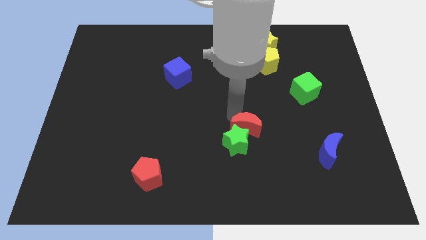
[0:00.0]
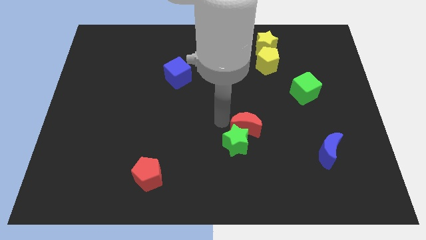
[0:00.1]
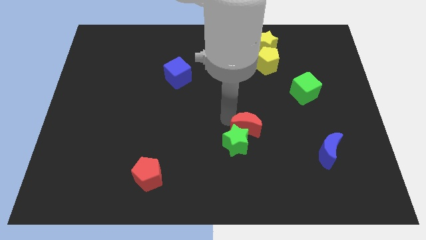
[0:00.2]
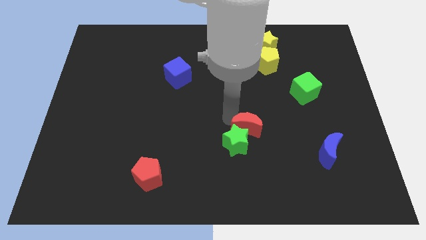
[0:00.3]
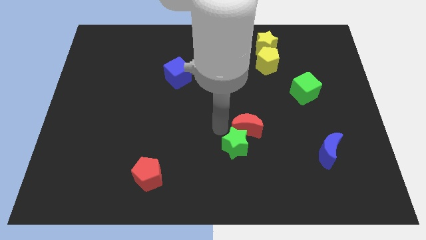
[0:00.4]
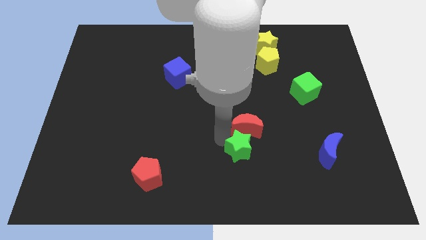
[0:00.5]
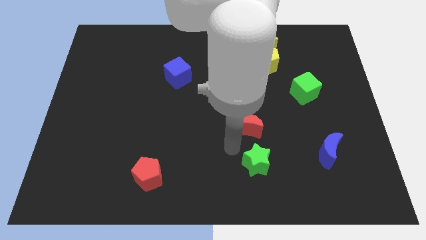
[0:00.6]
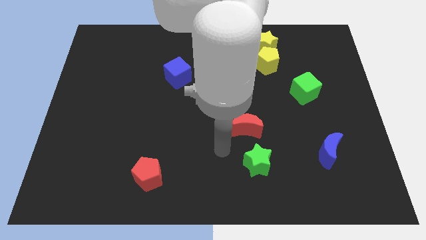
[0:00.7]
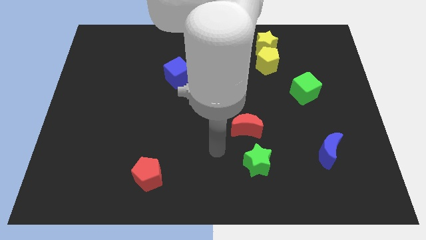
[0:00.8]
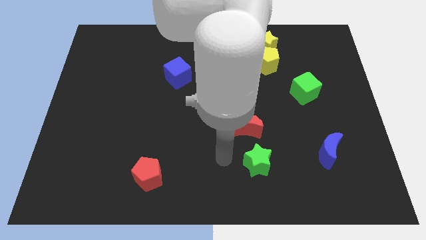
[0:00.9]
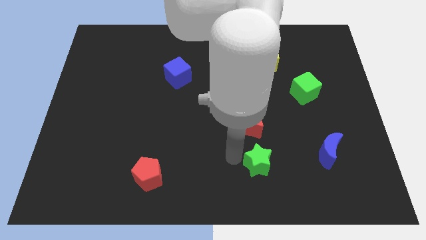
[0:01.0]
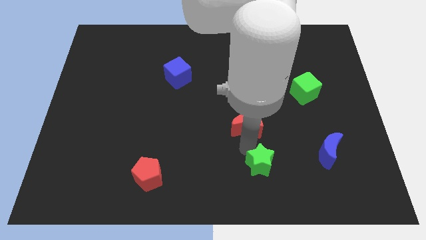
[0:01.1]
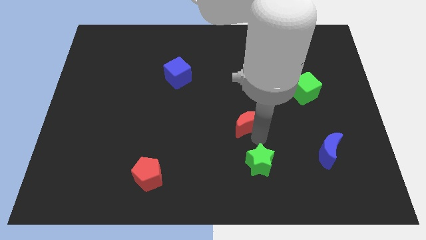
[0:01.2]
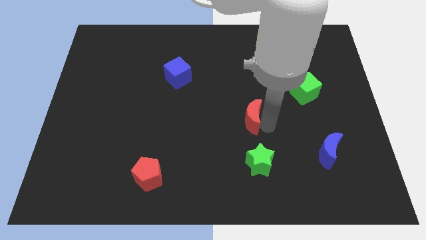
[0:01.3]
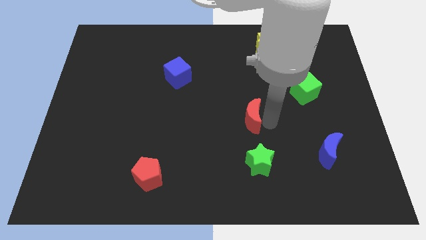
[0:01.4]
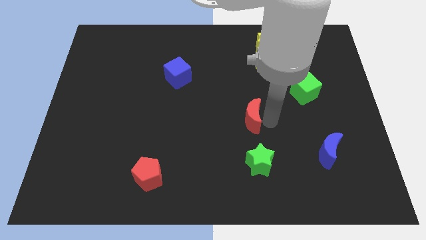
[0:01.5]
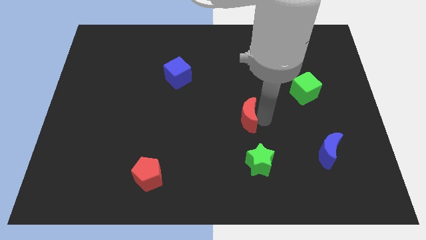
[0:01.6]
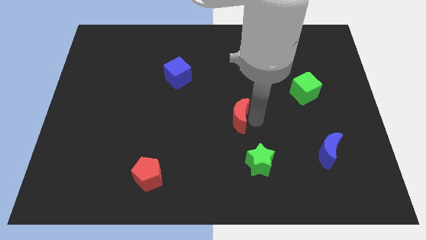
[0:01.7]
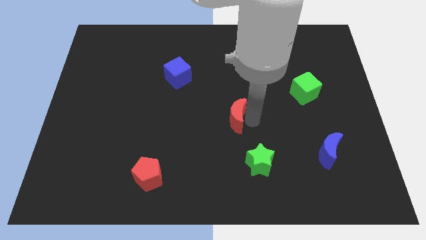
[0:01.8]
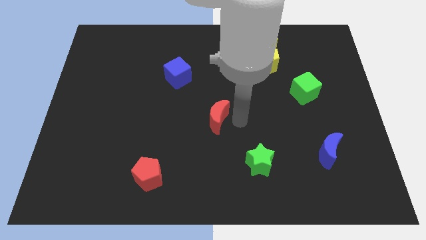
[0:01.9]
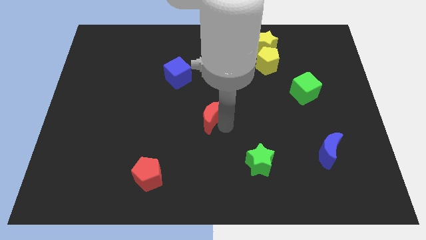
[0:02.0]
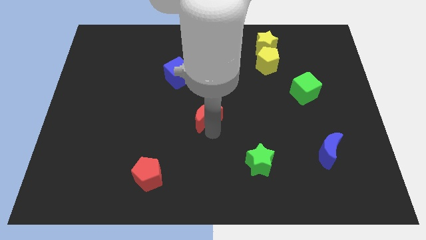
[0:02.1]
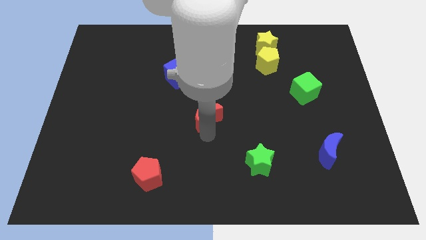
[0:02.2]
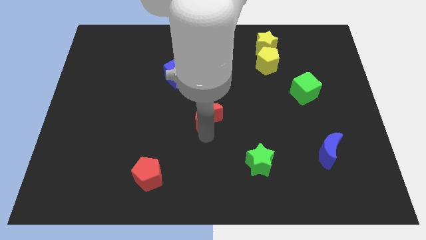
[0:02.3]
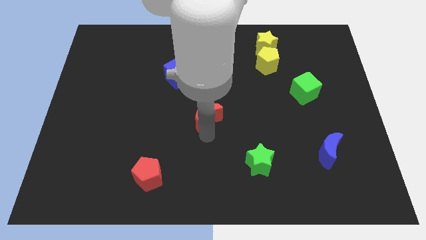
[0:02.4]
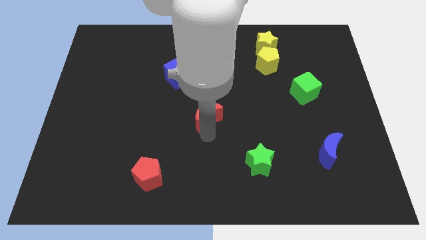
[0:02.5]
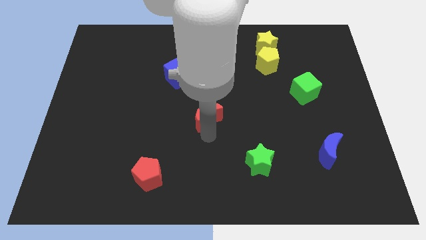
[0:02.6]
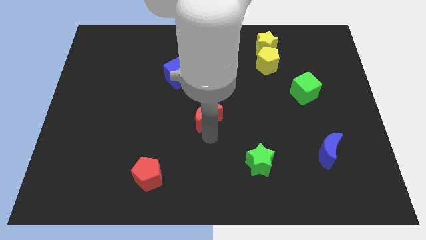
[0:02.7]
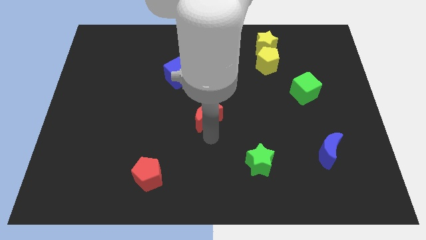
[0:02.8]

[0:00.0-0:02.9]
place red moon diagonally towards blue cube

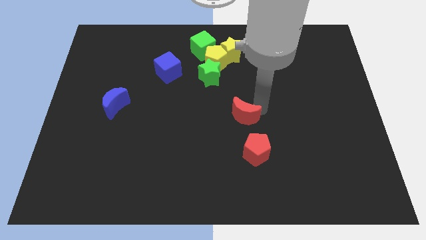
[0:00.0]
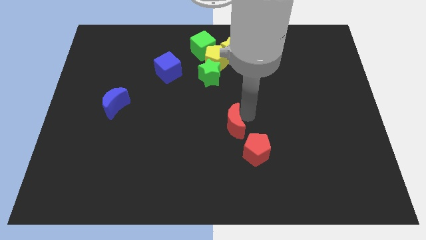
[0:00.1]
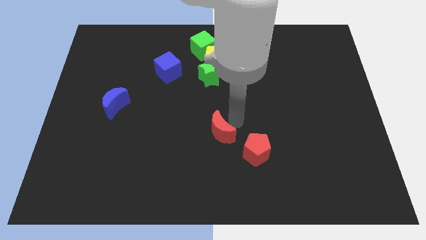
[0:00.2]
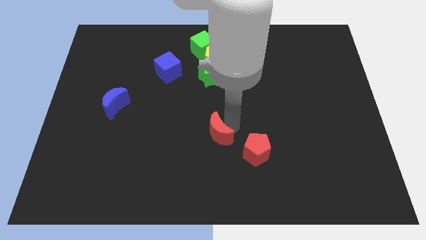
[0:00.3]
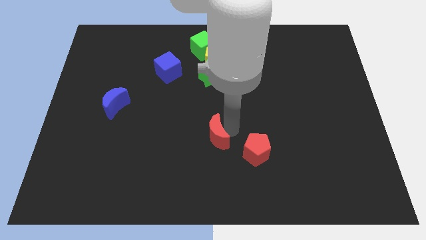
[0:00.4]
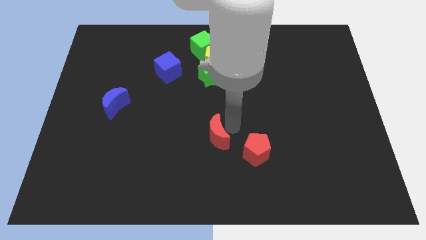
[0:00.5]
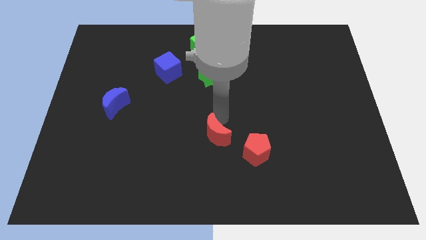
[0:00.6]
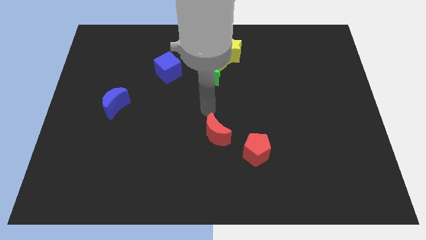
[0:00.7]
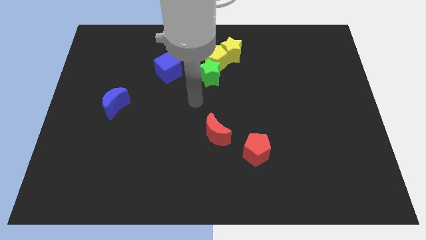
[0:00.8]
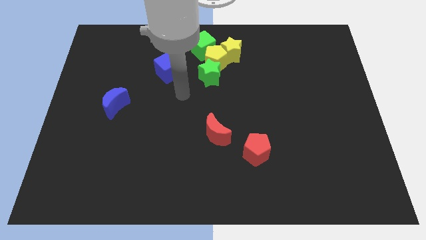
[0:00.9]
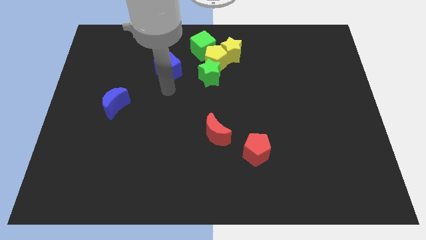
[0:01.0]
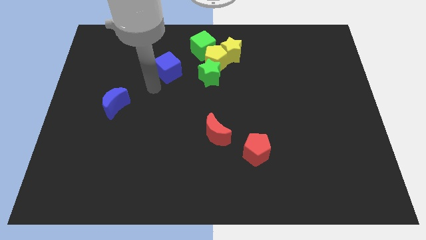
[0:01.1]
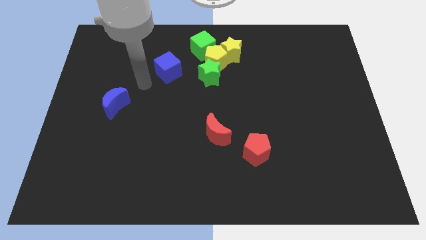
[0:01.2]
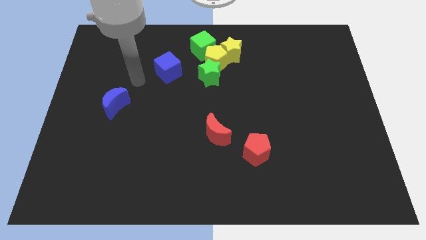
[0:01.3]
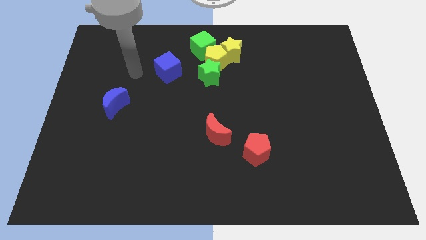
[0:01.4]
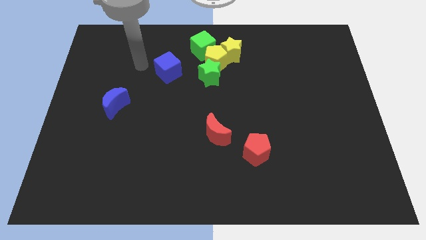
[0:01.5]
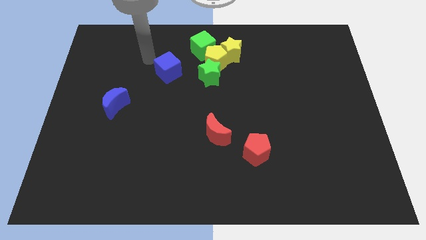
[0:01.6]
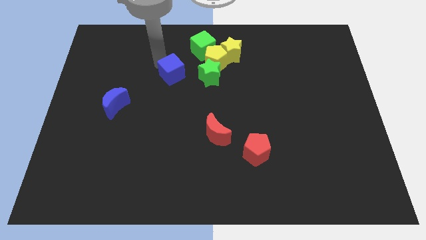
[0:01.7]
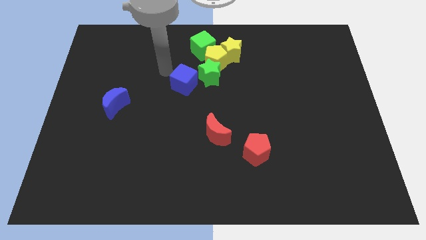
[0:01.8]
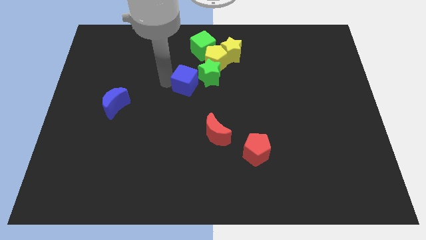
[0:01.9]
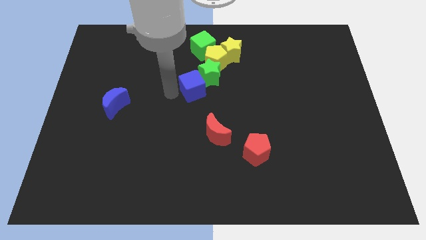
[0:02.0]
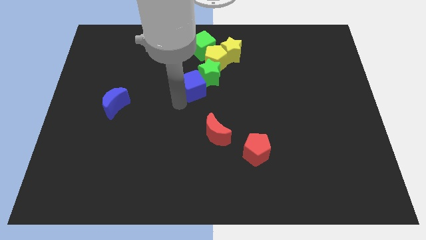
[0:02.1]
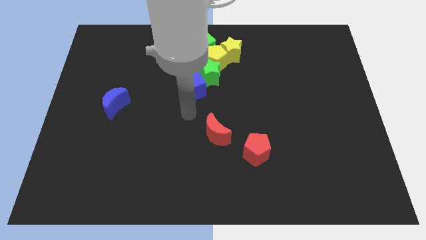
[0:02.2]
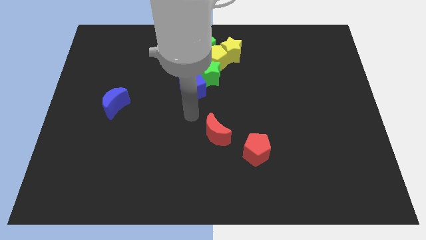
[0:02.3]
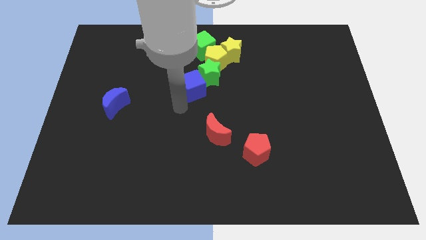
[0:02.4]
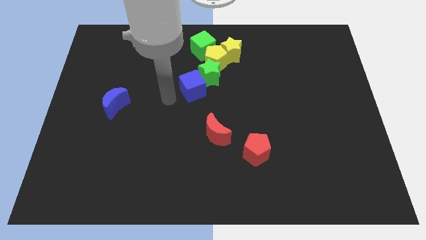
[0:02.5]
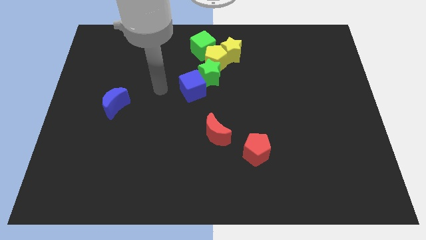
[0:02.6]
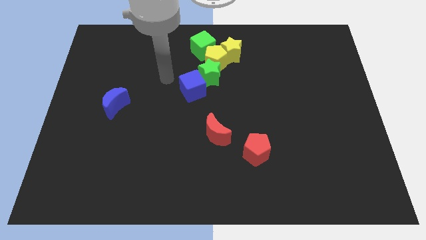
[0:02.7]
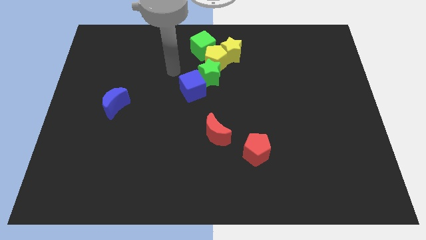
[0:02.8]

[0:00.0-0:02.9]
push the blue cube into a green star

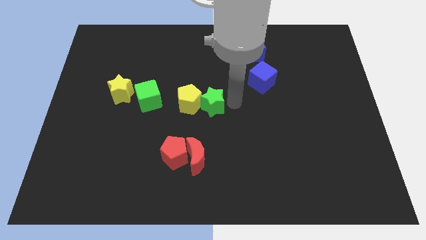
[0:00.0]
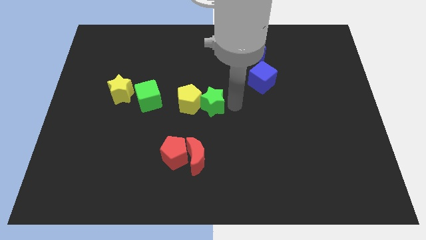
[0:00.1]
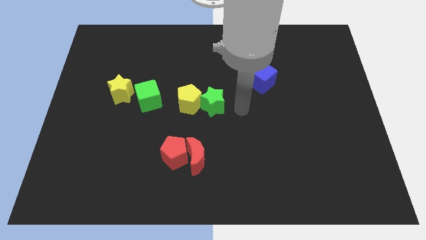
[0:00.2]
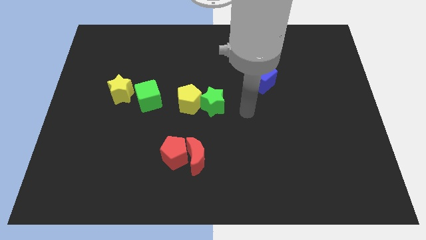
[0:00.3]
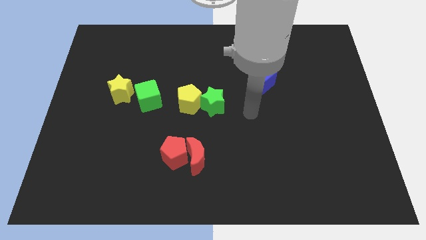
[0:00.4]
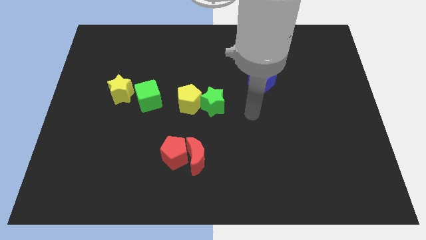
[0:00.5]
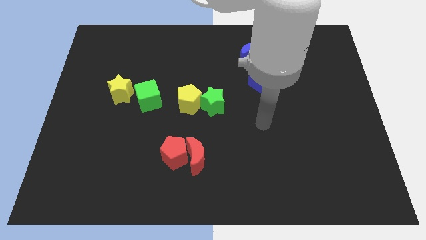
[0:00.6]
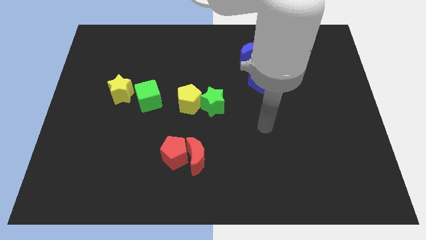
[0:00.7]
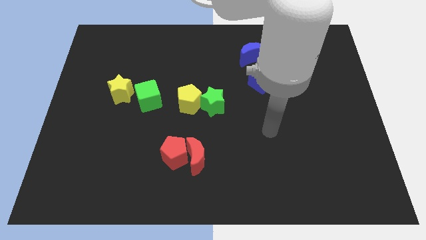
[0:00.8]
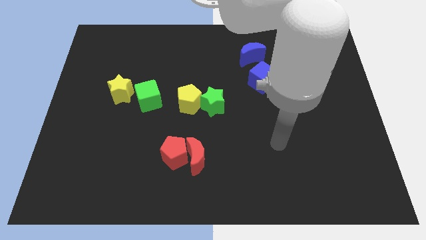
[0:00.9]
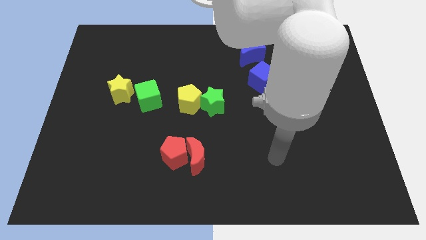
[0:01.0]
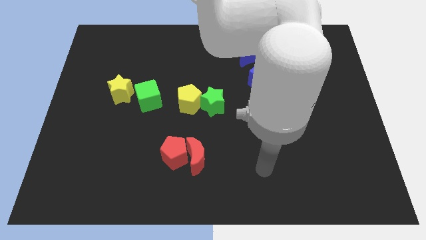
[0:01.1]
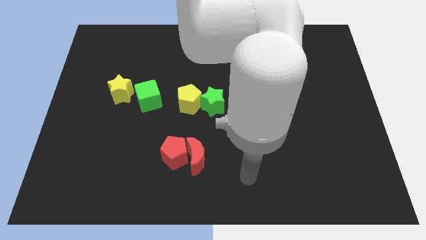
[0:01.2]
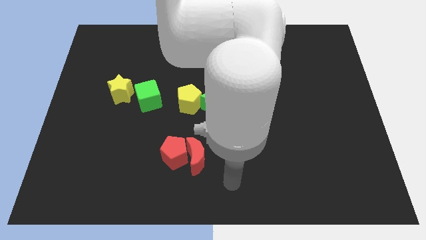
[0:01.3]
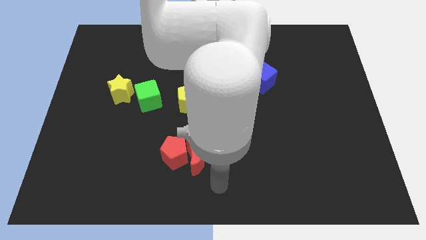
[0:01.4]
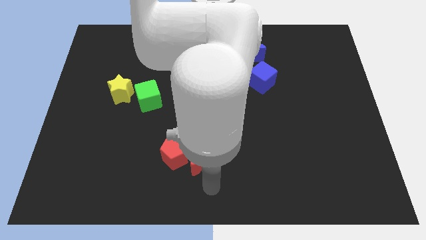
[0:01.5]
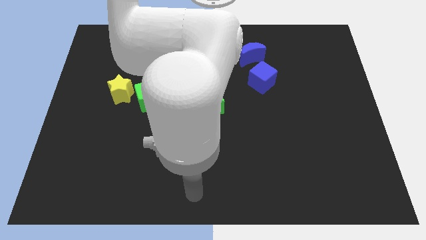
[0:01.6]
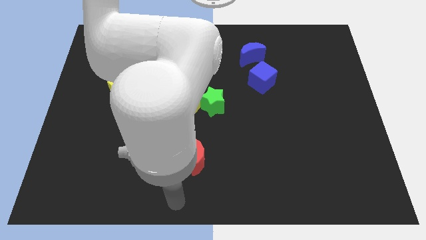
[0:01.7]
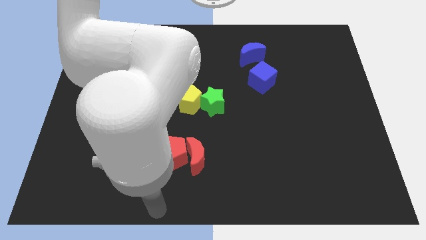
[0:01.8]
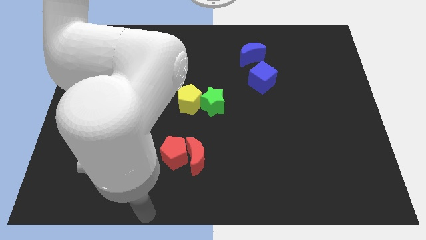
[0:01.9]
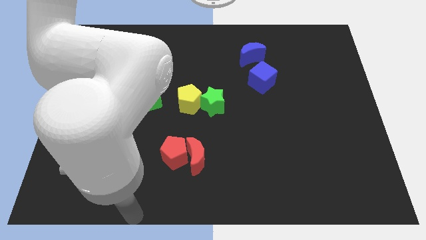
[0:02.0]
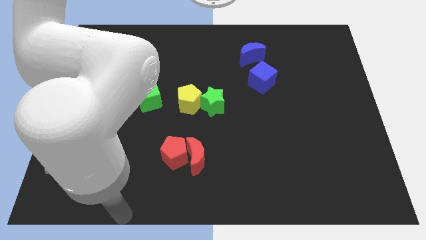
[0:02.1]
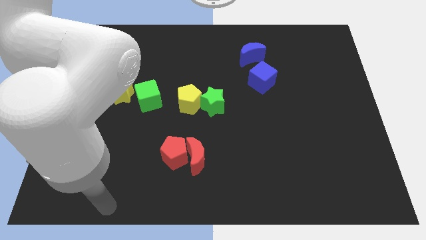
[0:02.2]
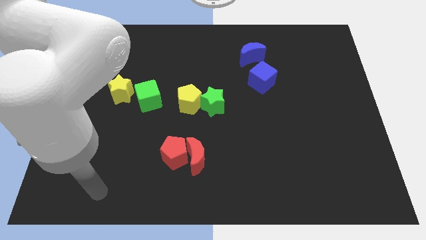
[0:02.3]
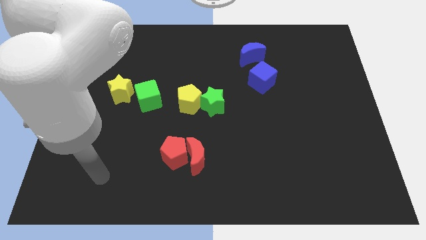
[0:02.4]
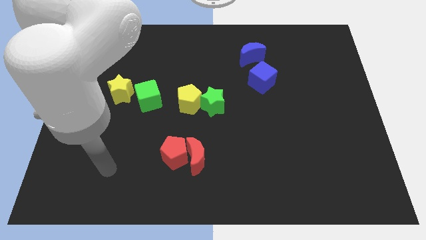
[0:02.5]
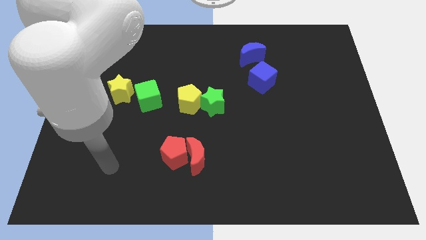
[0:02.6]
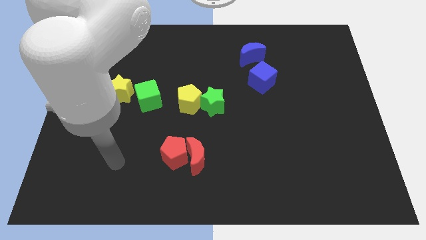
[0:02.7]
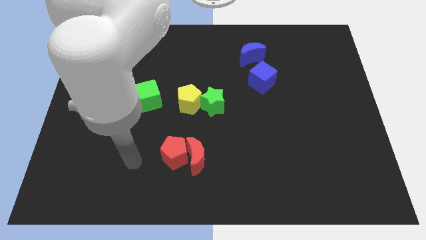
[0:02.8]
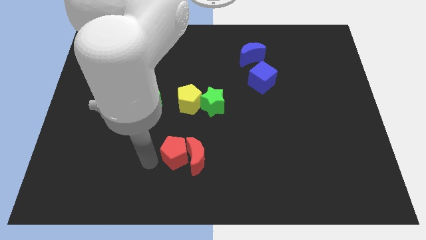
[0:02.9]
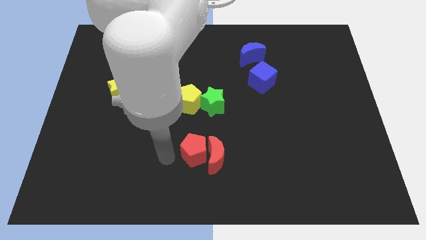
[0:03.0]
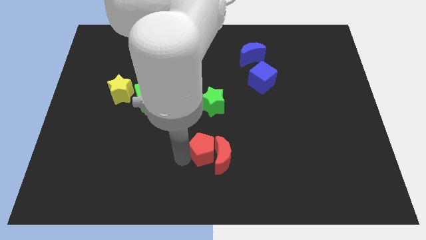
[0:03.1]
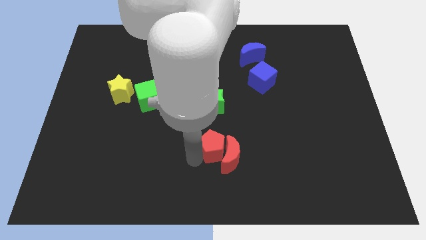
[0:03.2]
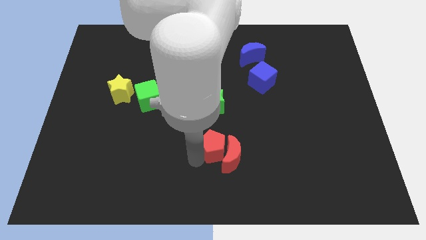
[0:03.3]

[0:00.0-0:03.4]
push the red blocks towards the right side of the board
